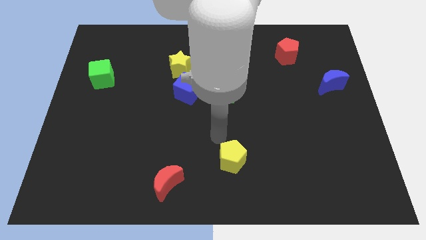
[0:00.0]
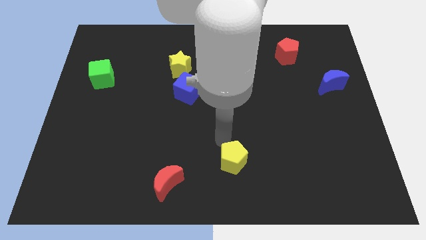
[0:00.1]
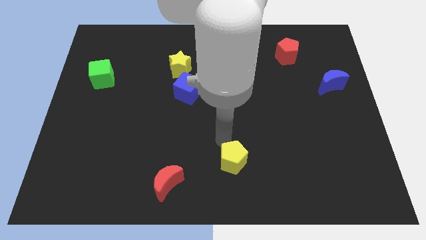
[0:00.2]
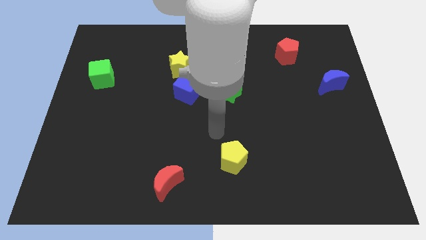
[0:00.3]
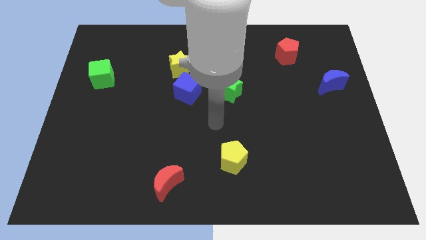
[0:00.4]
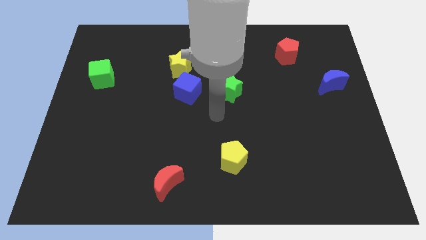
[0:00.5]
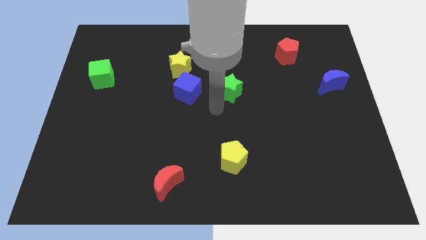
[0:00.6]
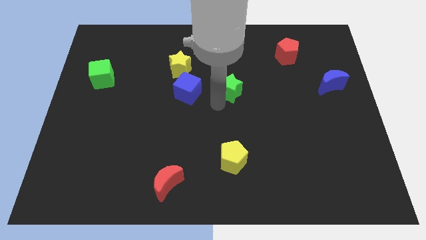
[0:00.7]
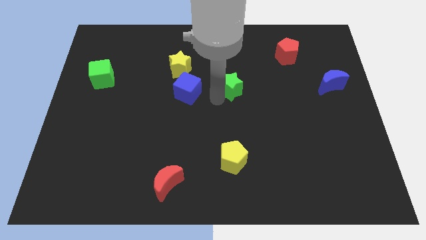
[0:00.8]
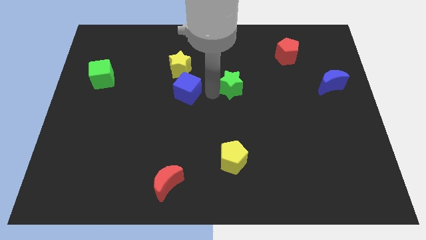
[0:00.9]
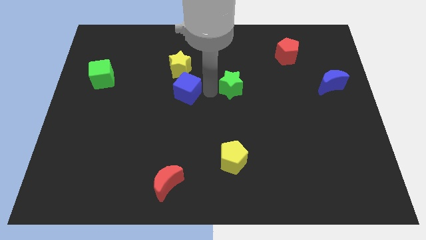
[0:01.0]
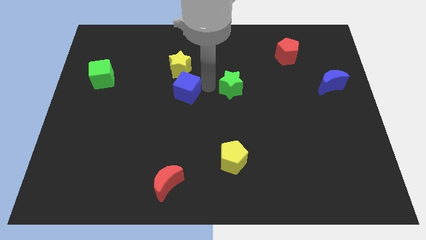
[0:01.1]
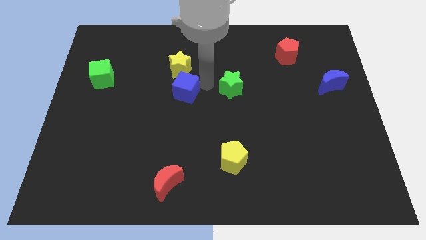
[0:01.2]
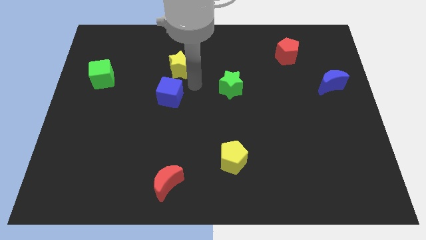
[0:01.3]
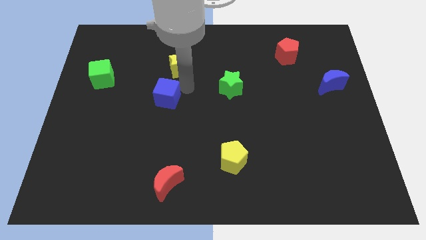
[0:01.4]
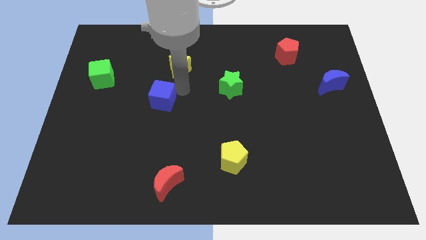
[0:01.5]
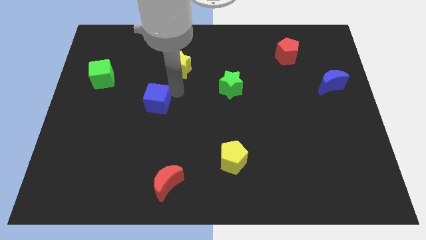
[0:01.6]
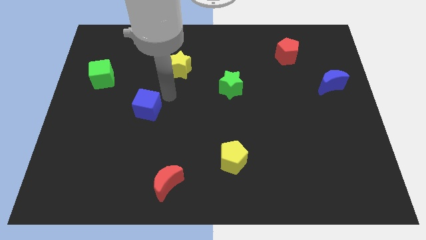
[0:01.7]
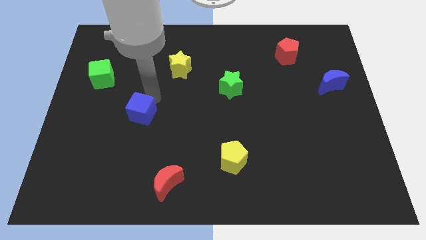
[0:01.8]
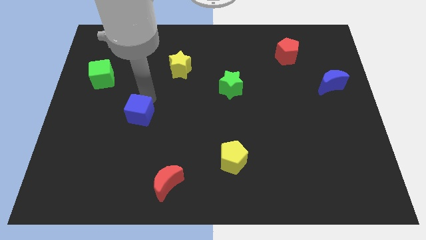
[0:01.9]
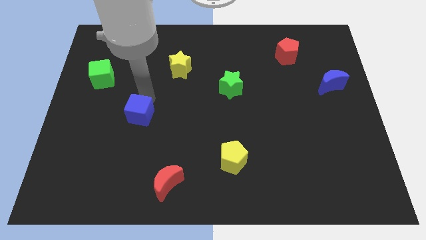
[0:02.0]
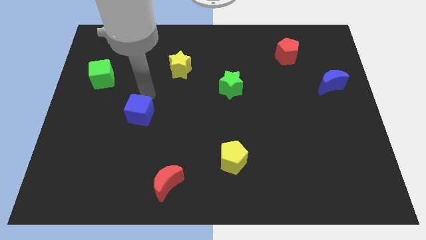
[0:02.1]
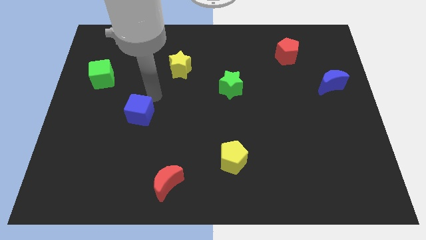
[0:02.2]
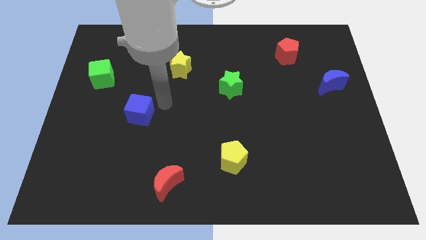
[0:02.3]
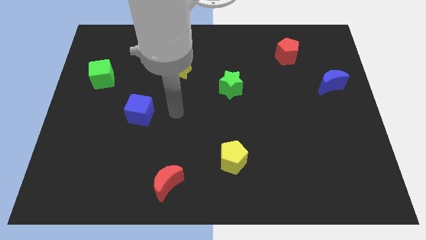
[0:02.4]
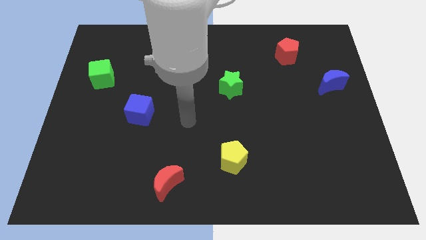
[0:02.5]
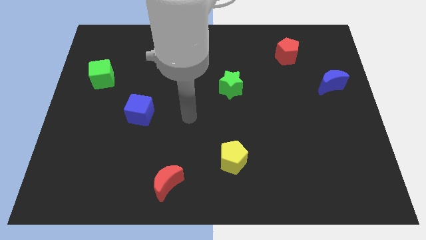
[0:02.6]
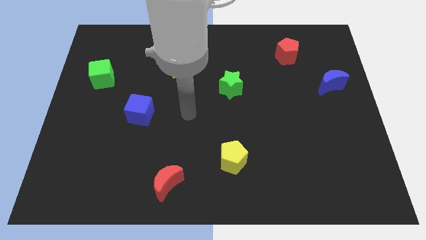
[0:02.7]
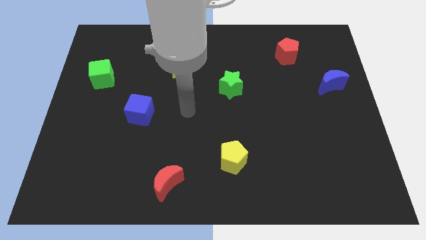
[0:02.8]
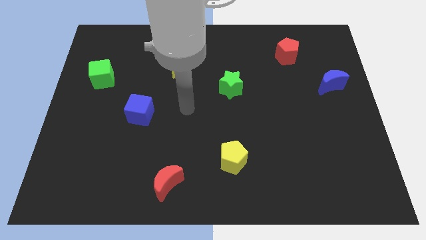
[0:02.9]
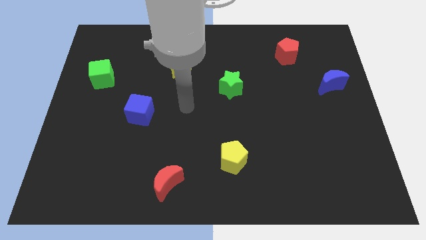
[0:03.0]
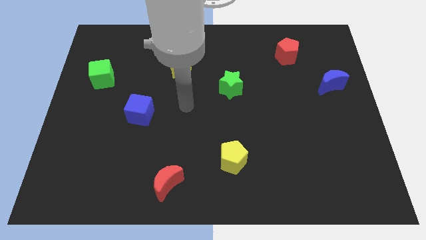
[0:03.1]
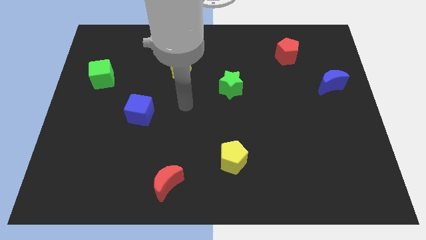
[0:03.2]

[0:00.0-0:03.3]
slightly touch left to the green star

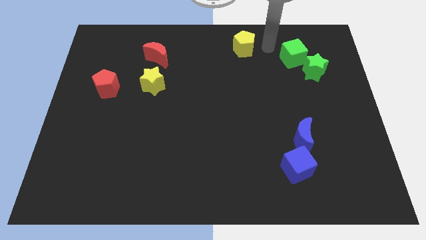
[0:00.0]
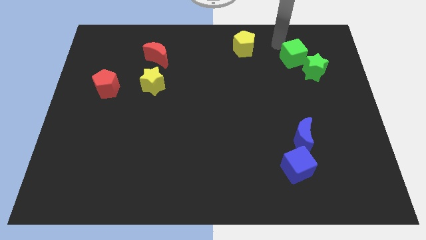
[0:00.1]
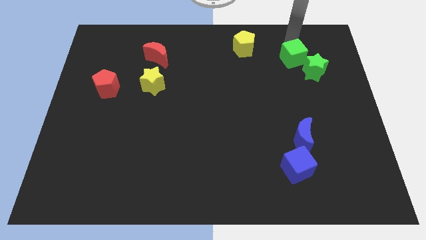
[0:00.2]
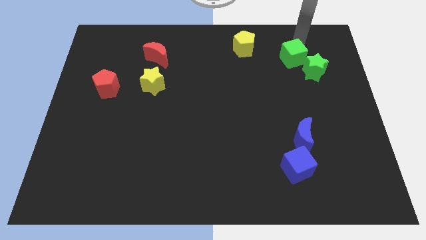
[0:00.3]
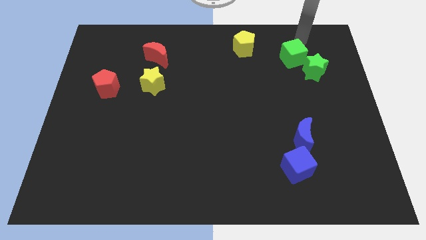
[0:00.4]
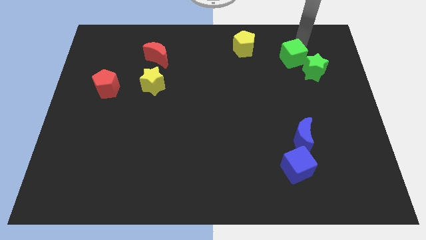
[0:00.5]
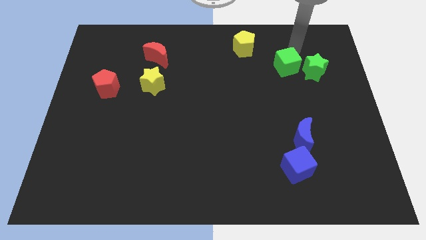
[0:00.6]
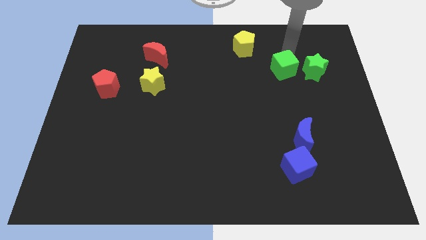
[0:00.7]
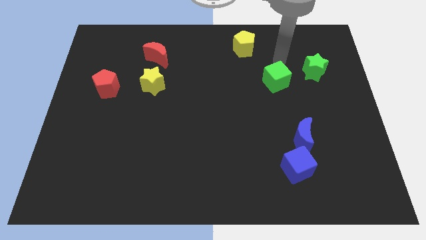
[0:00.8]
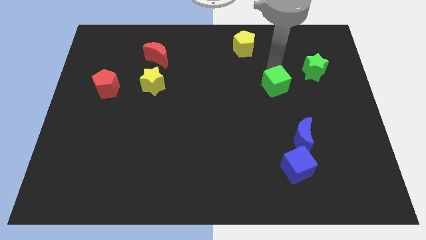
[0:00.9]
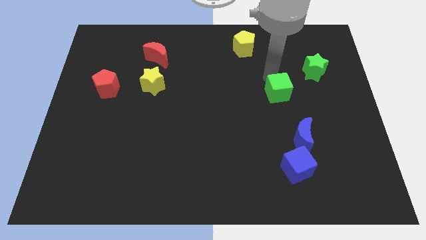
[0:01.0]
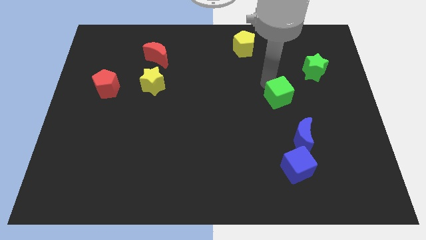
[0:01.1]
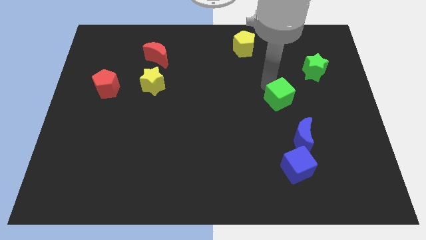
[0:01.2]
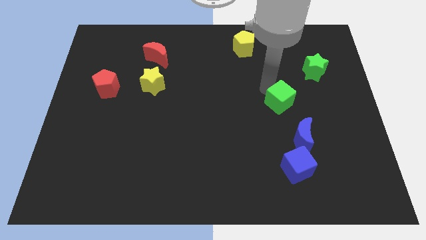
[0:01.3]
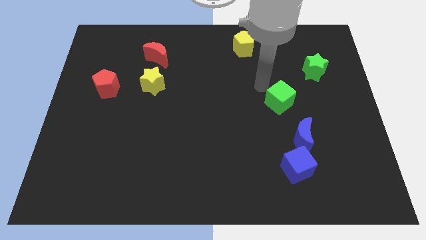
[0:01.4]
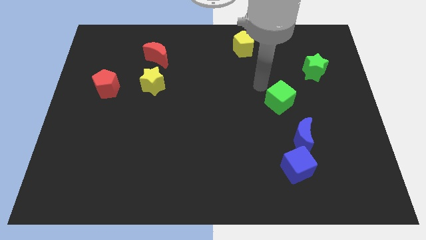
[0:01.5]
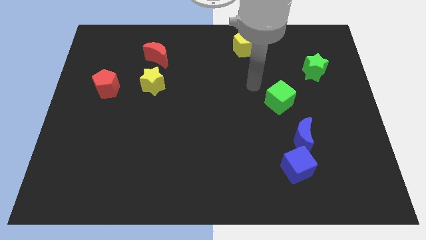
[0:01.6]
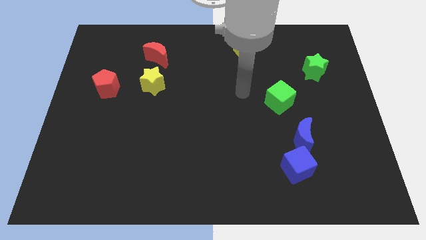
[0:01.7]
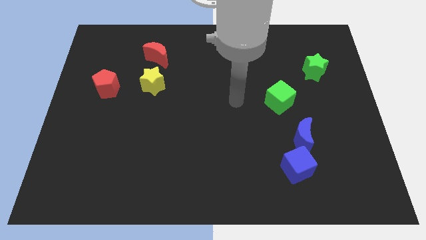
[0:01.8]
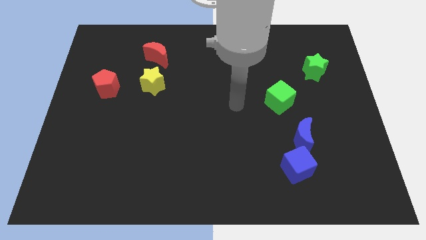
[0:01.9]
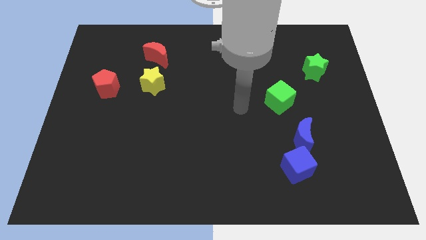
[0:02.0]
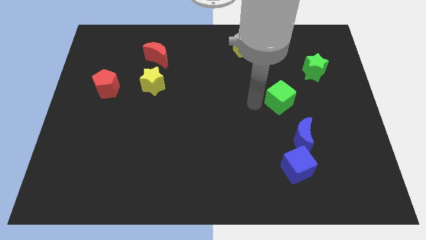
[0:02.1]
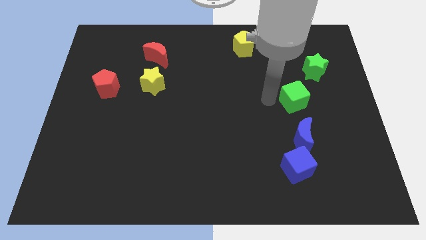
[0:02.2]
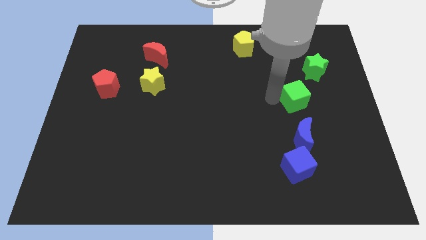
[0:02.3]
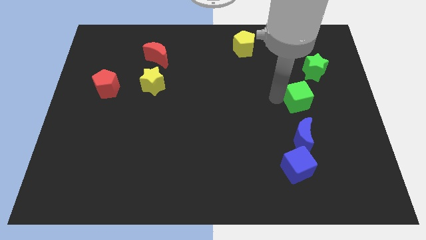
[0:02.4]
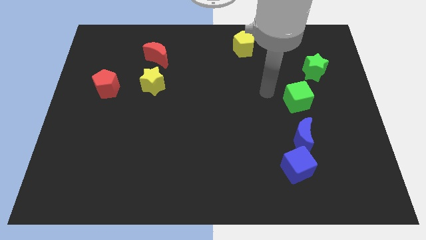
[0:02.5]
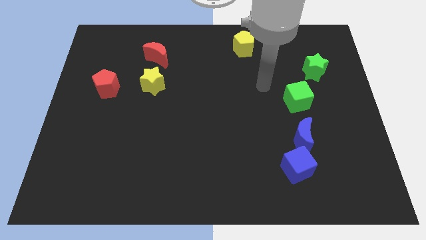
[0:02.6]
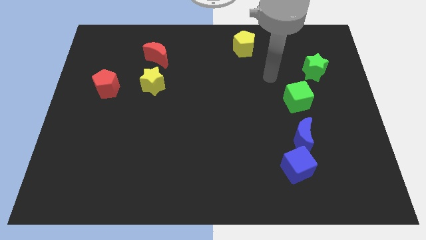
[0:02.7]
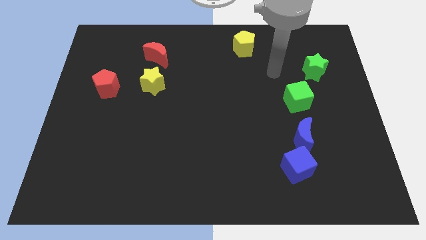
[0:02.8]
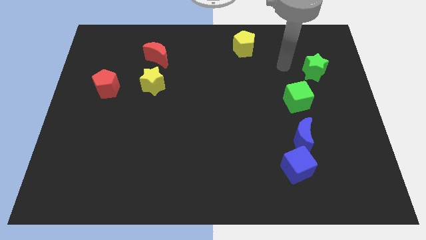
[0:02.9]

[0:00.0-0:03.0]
place the green cube diagonally below to the green star

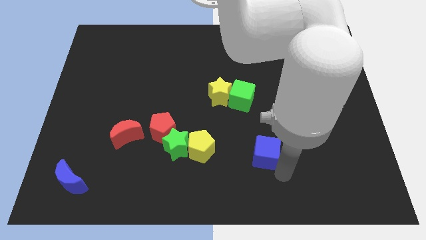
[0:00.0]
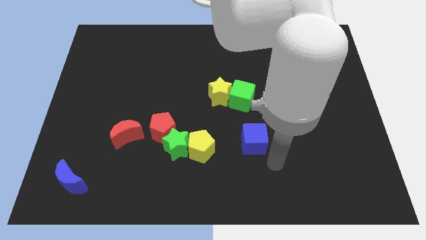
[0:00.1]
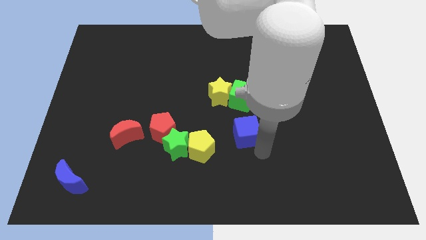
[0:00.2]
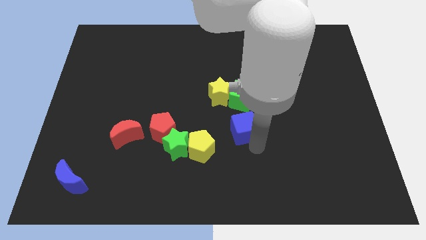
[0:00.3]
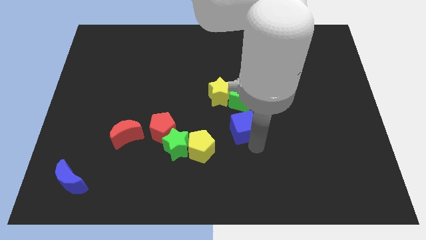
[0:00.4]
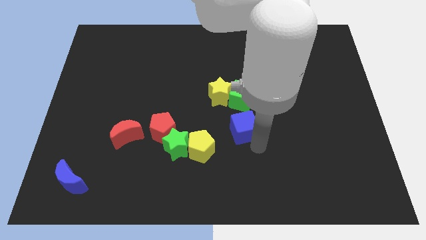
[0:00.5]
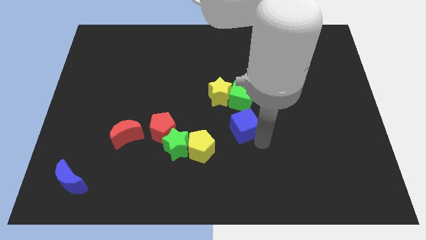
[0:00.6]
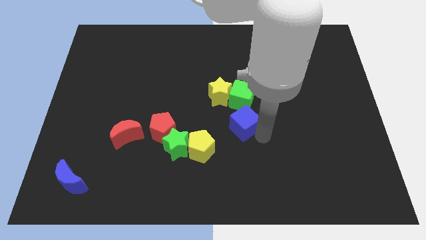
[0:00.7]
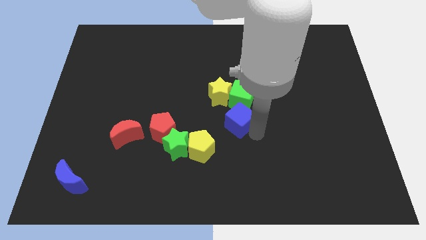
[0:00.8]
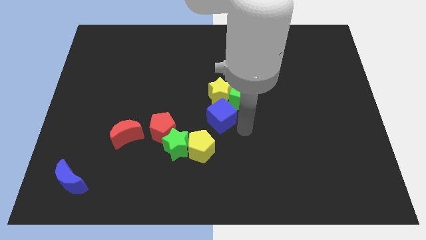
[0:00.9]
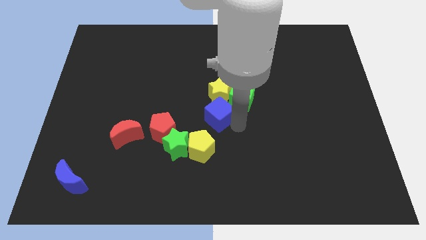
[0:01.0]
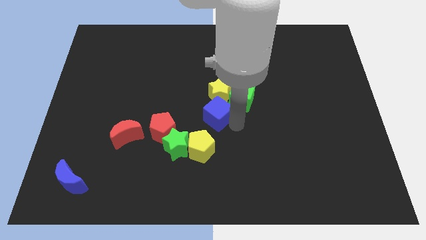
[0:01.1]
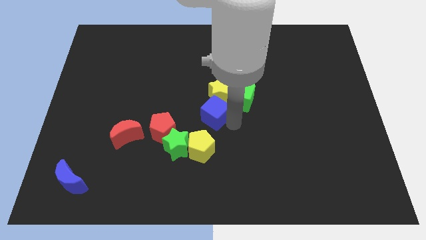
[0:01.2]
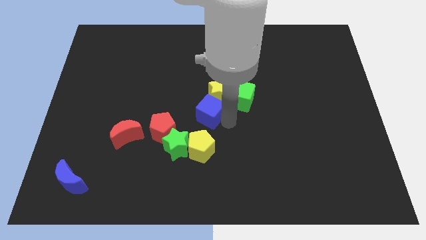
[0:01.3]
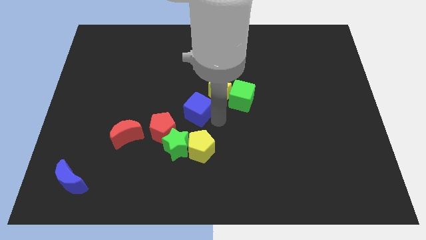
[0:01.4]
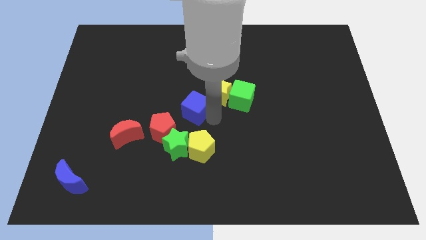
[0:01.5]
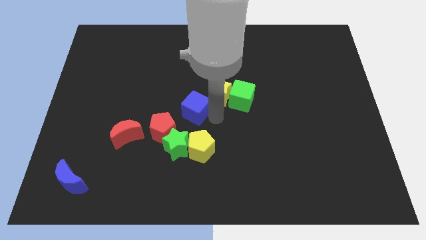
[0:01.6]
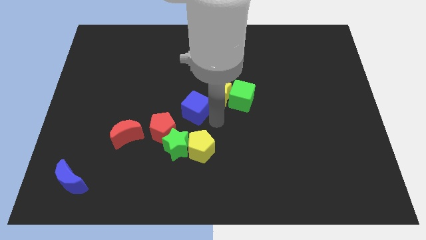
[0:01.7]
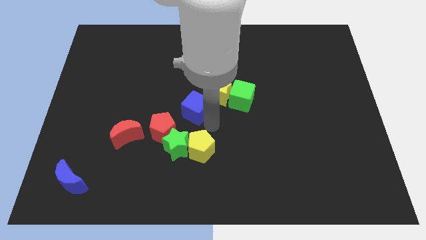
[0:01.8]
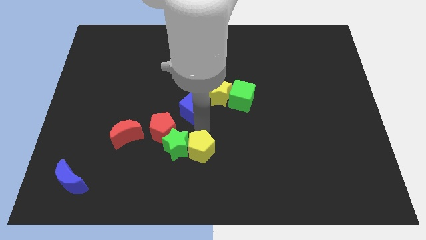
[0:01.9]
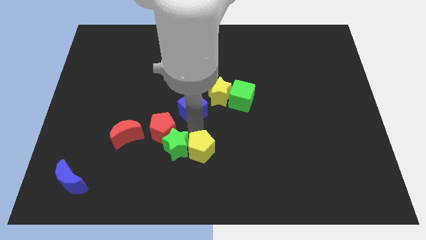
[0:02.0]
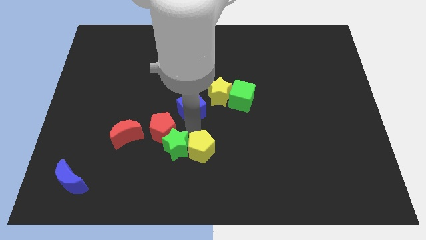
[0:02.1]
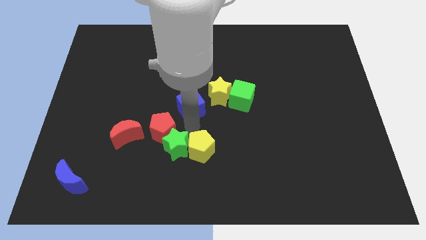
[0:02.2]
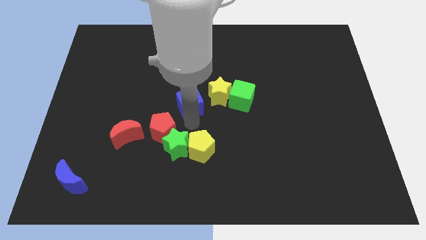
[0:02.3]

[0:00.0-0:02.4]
place the blue cube diagonal to the red pentagon

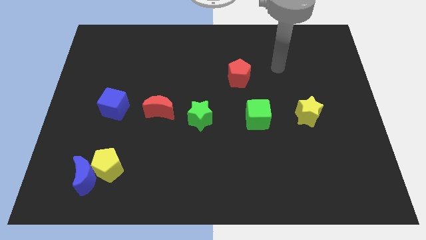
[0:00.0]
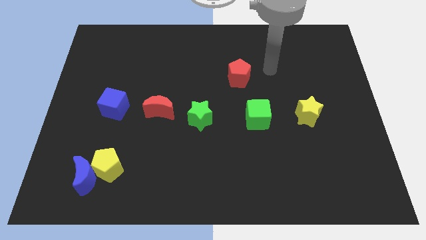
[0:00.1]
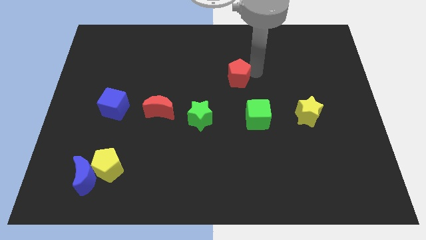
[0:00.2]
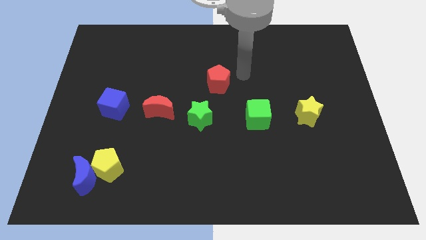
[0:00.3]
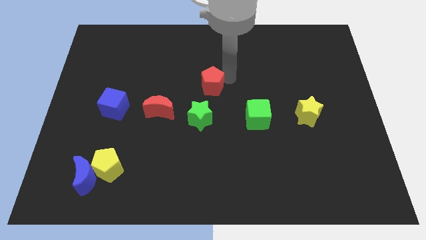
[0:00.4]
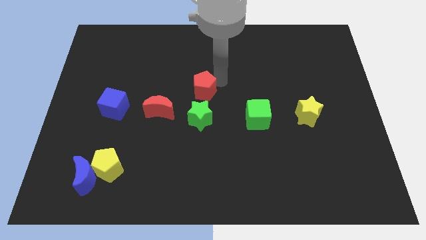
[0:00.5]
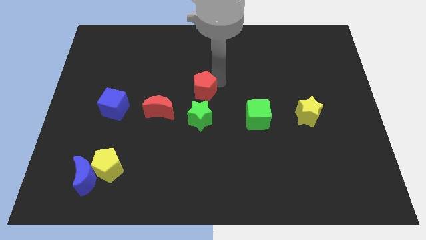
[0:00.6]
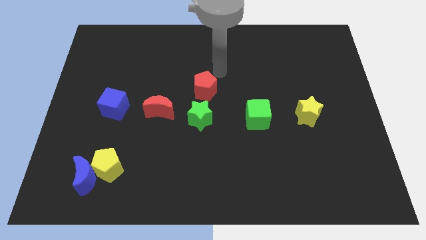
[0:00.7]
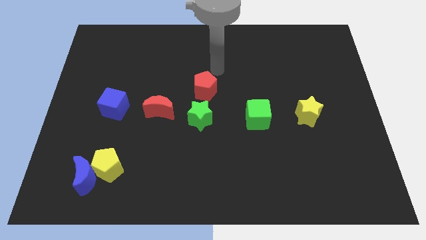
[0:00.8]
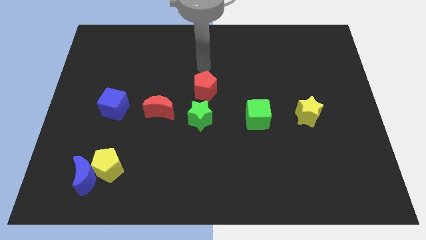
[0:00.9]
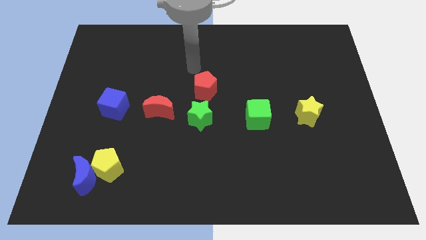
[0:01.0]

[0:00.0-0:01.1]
move red pentagon on top of green star
